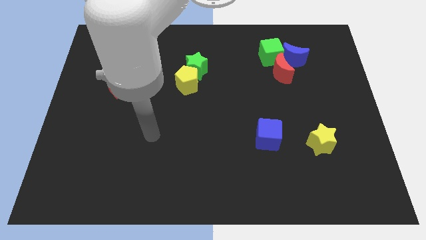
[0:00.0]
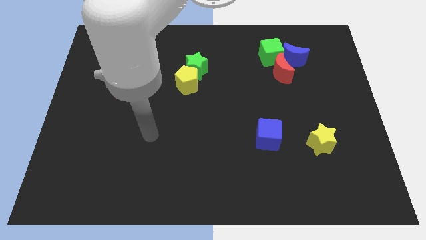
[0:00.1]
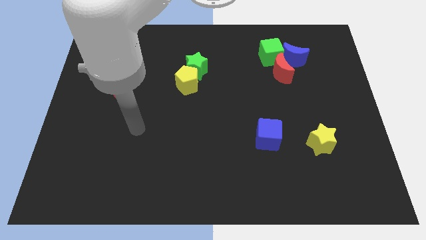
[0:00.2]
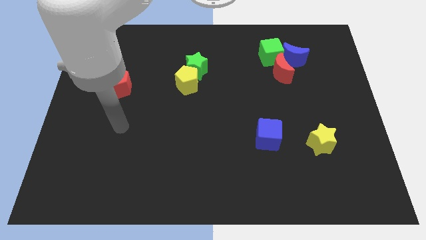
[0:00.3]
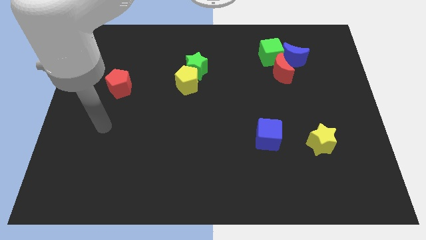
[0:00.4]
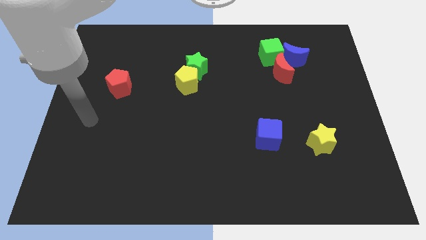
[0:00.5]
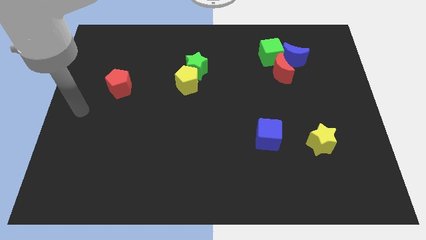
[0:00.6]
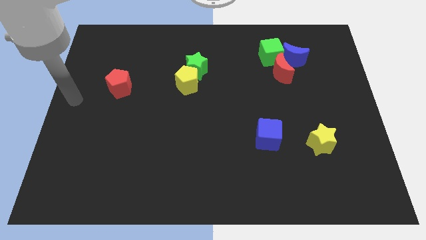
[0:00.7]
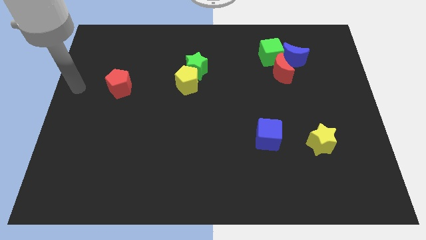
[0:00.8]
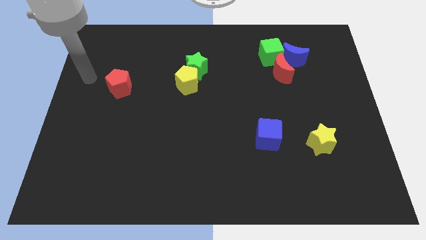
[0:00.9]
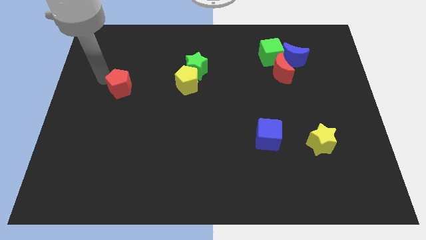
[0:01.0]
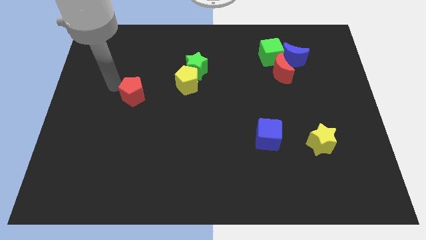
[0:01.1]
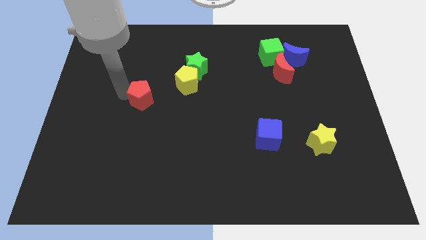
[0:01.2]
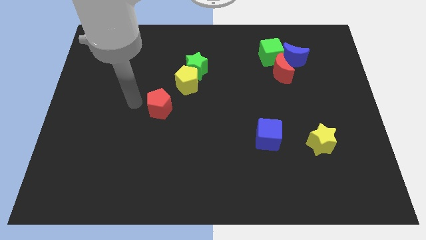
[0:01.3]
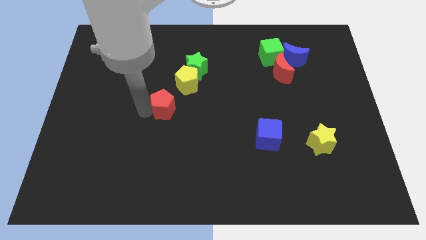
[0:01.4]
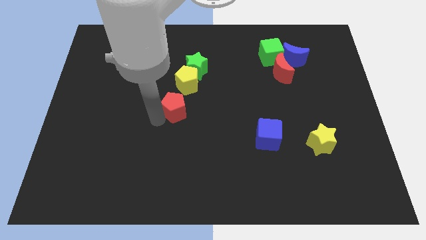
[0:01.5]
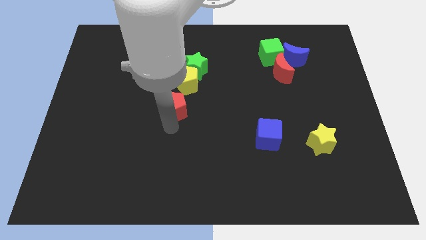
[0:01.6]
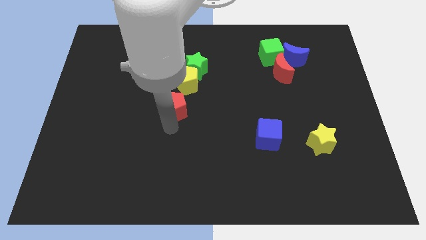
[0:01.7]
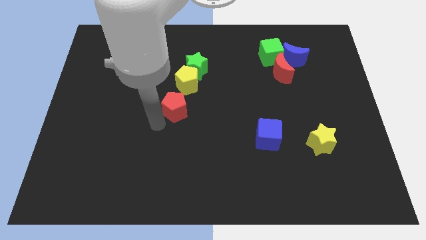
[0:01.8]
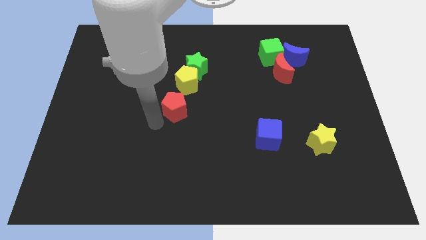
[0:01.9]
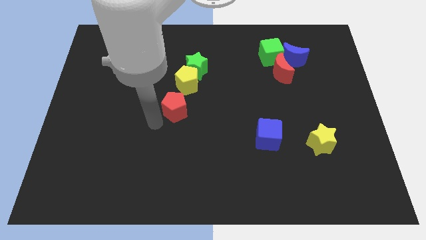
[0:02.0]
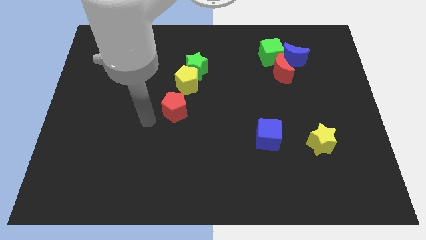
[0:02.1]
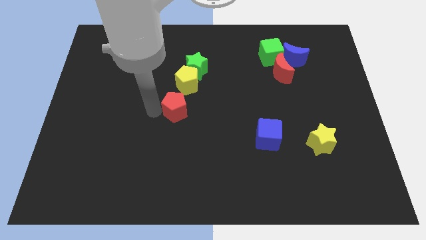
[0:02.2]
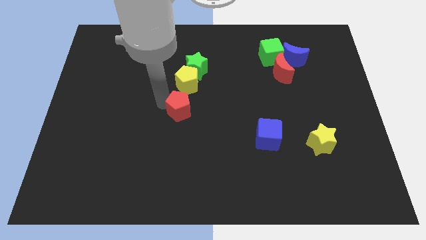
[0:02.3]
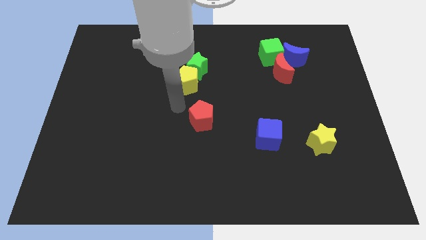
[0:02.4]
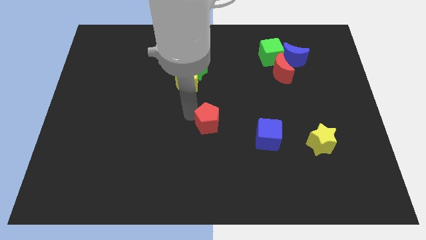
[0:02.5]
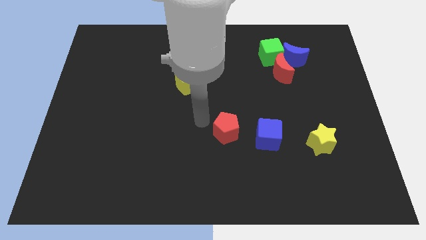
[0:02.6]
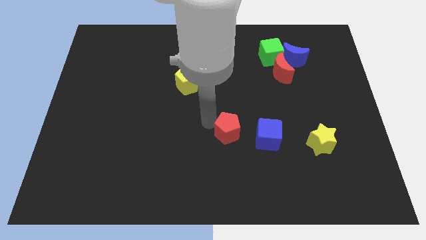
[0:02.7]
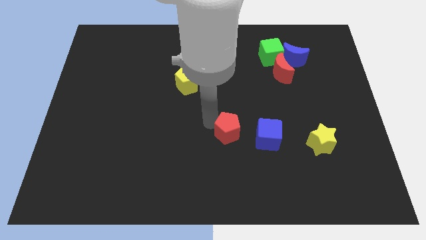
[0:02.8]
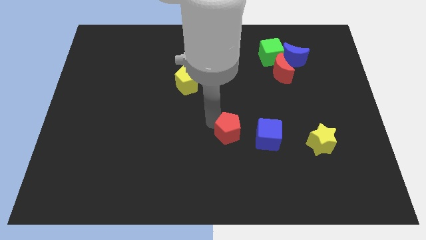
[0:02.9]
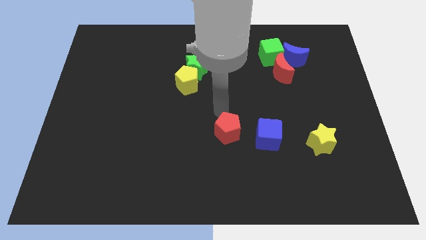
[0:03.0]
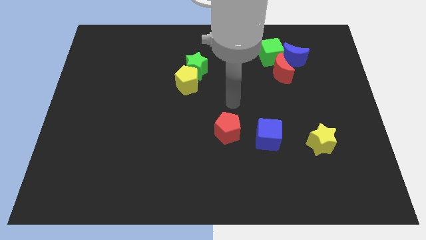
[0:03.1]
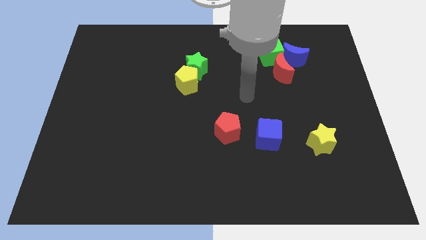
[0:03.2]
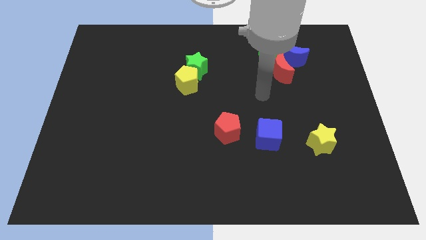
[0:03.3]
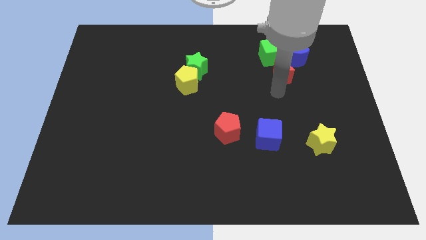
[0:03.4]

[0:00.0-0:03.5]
place red pentagon parallel to blue cube

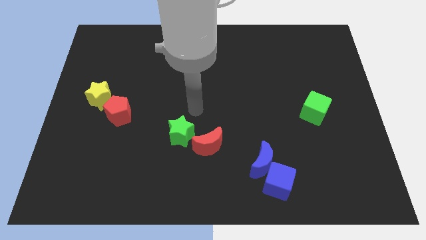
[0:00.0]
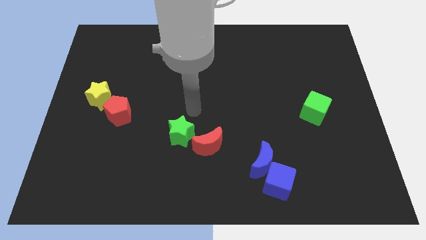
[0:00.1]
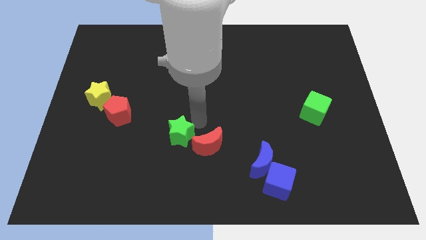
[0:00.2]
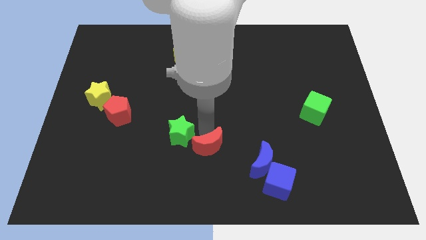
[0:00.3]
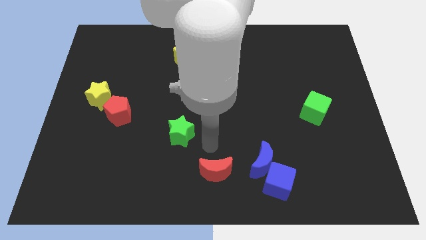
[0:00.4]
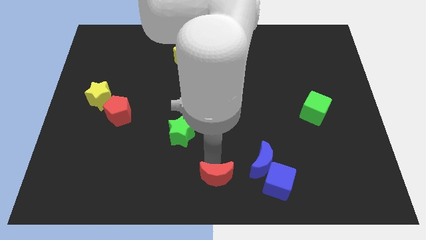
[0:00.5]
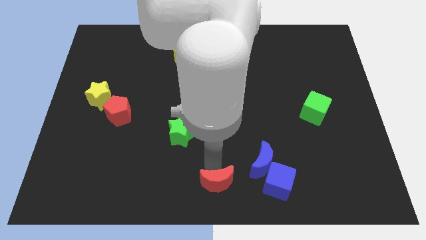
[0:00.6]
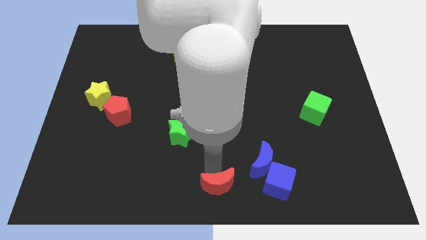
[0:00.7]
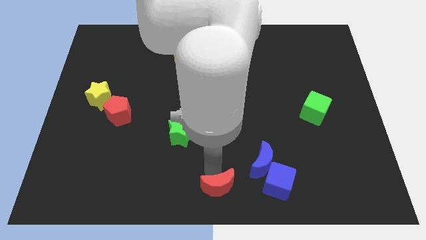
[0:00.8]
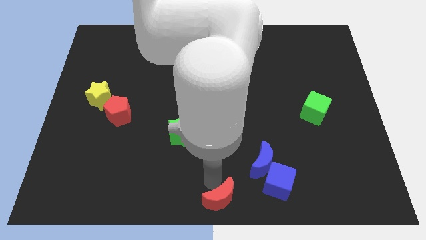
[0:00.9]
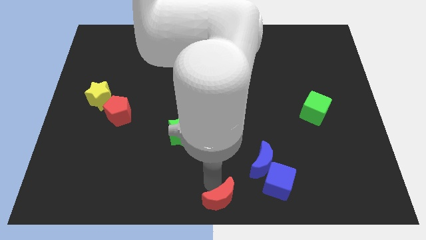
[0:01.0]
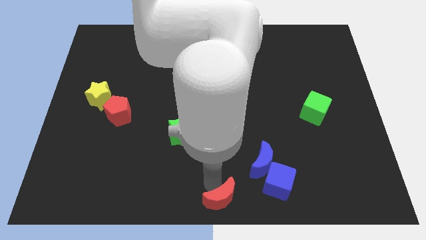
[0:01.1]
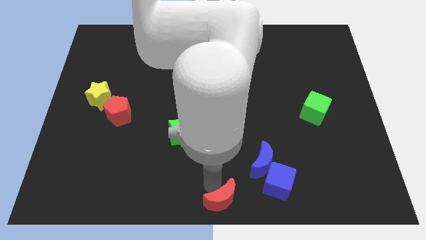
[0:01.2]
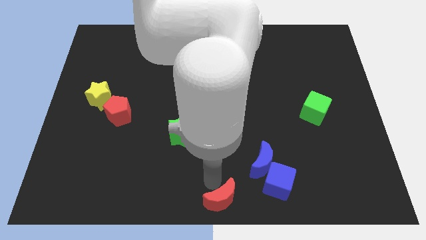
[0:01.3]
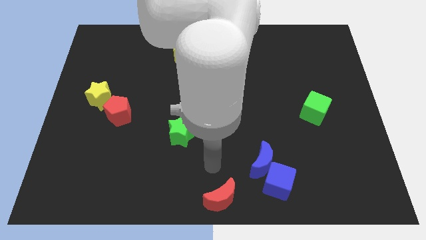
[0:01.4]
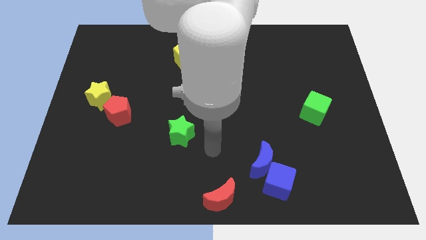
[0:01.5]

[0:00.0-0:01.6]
separate the red crescent from the green star

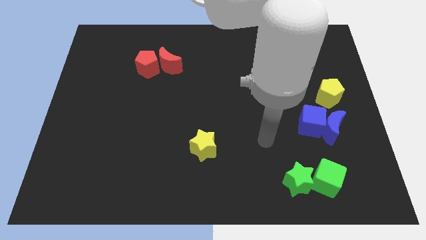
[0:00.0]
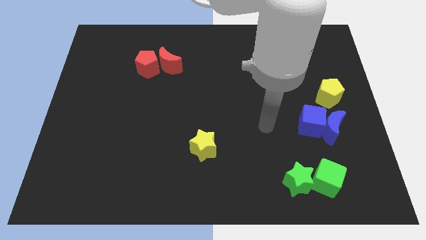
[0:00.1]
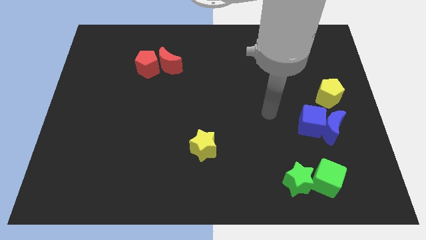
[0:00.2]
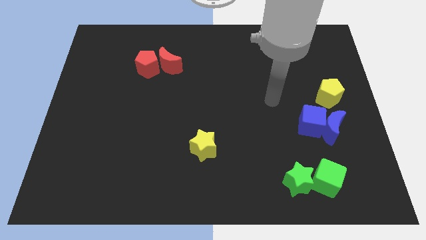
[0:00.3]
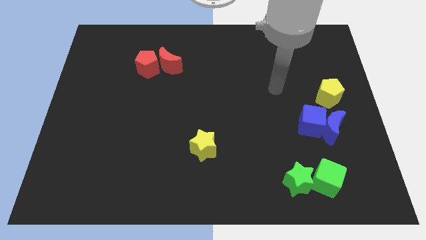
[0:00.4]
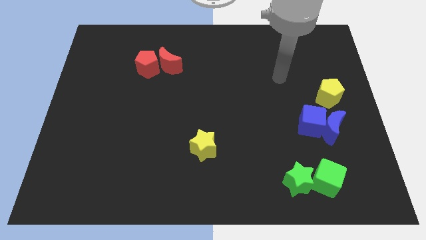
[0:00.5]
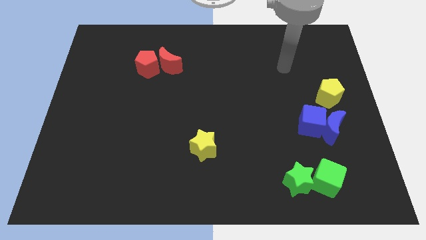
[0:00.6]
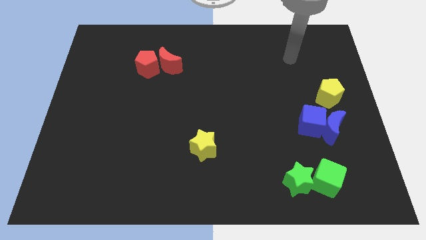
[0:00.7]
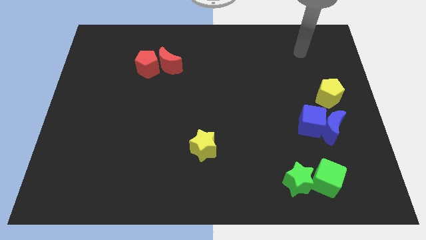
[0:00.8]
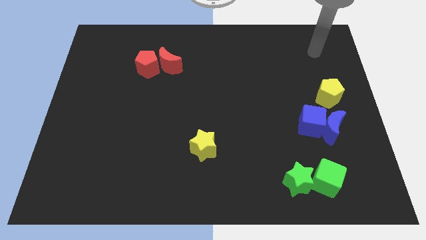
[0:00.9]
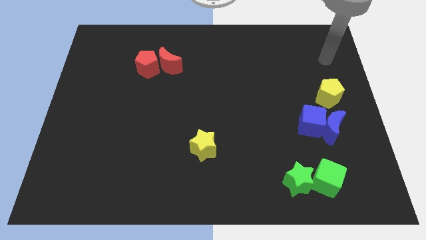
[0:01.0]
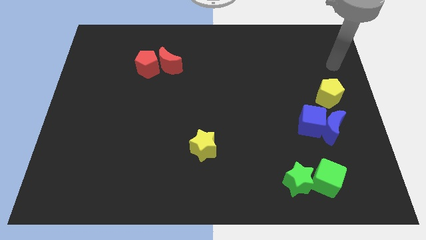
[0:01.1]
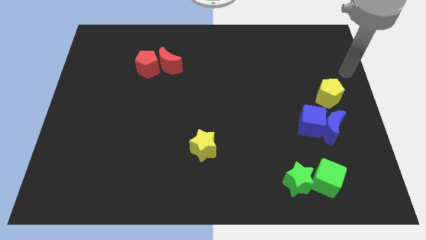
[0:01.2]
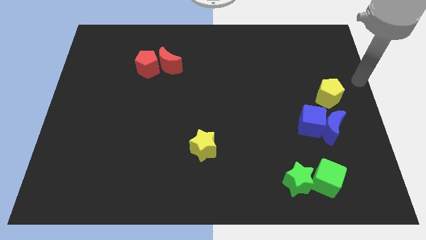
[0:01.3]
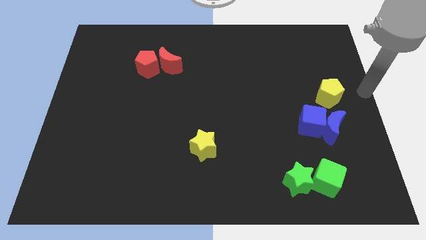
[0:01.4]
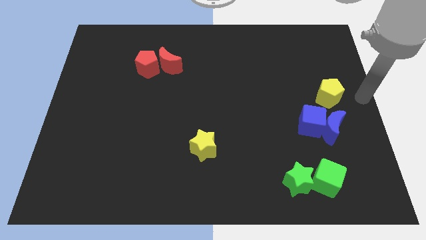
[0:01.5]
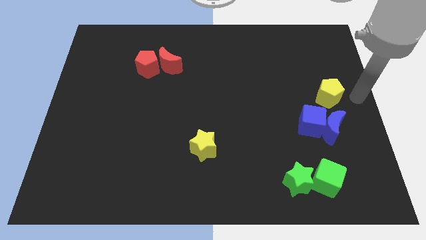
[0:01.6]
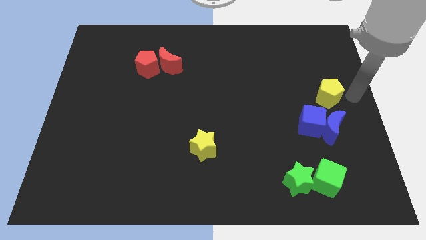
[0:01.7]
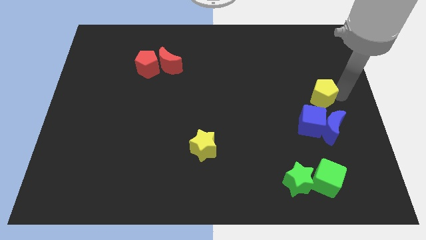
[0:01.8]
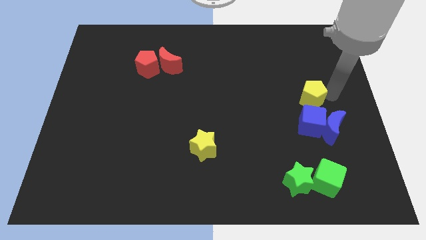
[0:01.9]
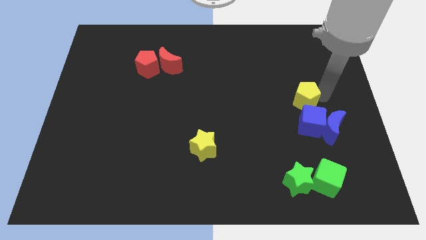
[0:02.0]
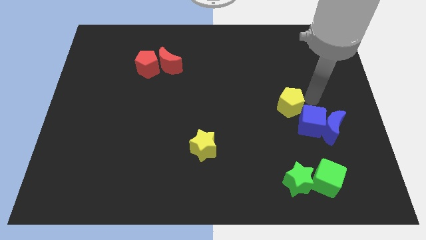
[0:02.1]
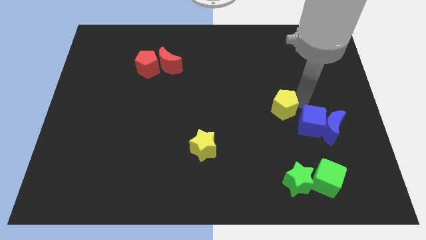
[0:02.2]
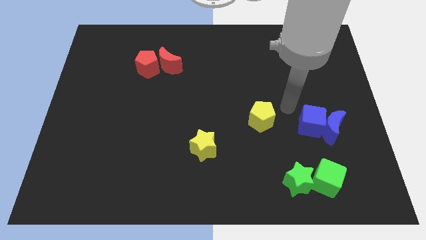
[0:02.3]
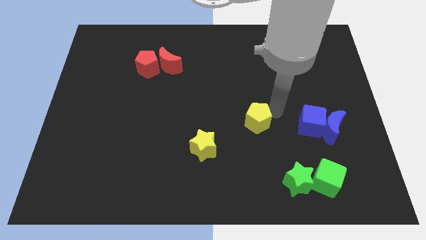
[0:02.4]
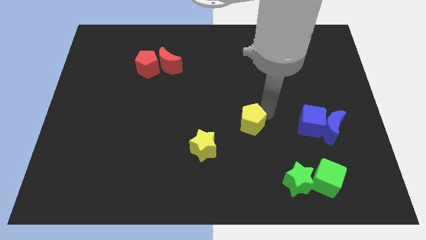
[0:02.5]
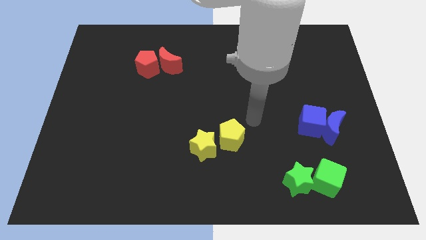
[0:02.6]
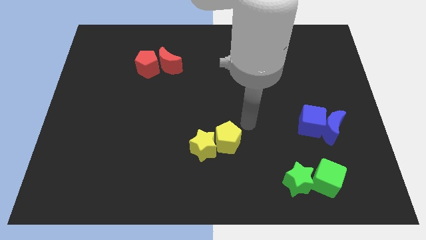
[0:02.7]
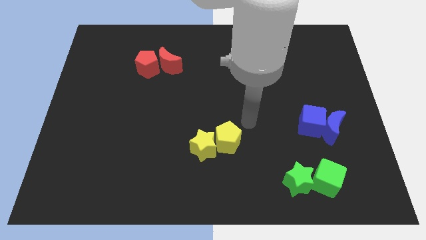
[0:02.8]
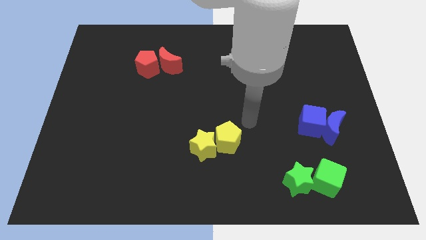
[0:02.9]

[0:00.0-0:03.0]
move the yellow pentagon right to the yellow star

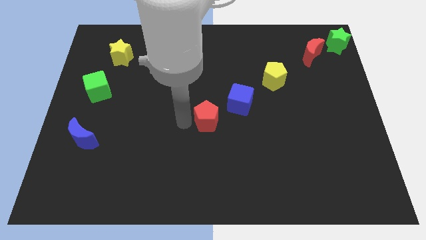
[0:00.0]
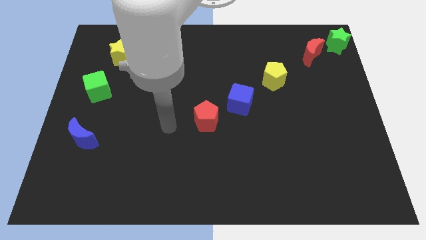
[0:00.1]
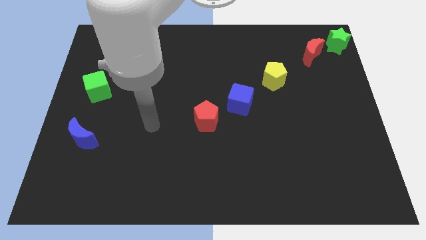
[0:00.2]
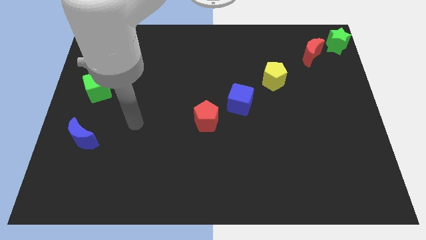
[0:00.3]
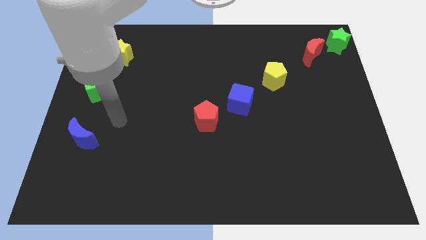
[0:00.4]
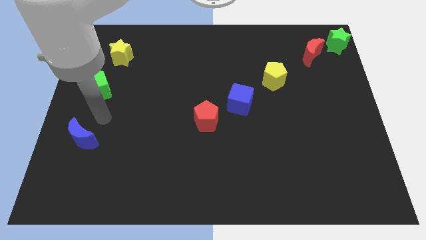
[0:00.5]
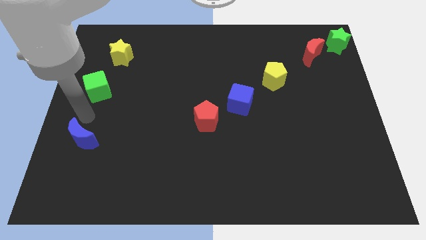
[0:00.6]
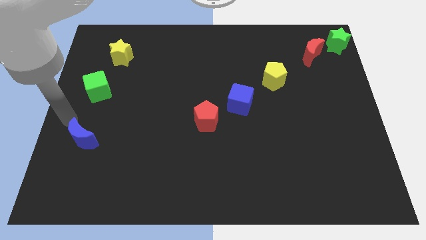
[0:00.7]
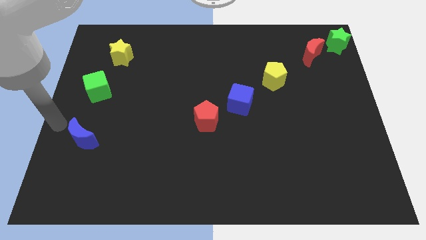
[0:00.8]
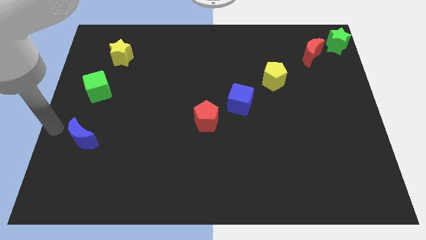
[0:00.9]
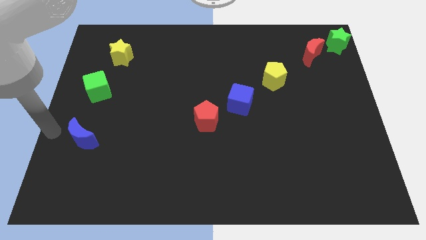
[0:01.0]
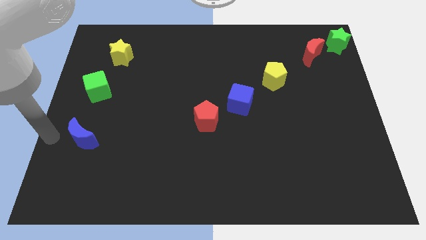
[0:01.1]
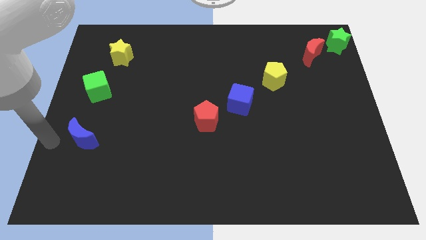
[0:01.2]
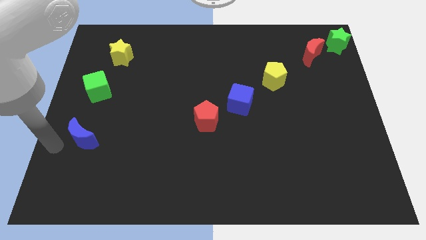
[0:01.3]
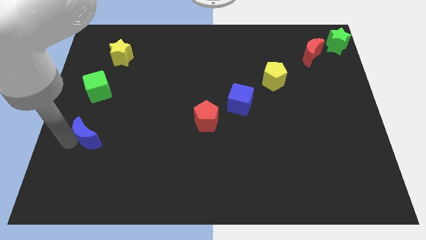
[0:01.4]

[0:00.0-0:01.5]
place your arm to the left side of blue crescent
